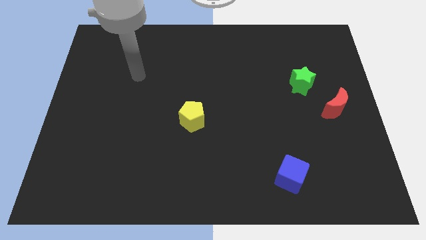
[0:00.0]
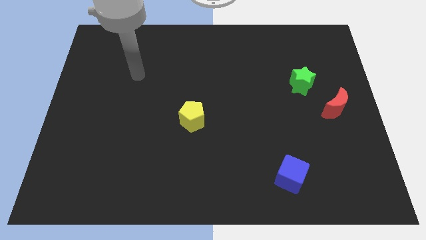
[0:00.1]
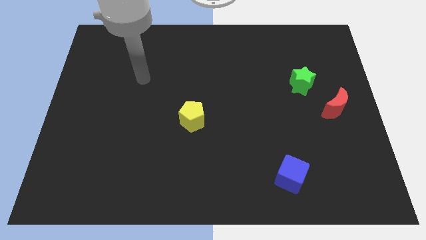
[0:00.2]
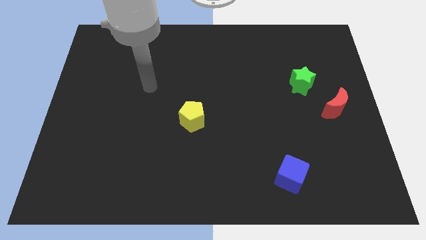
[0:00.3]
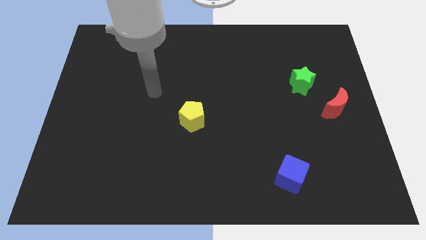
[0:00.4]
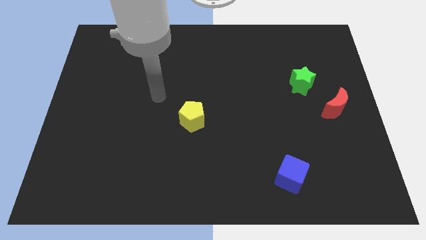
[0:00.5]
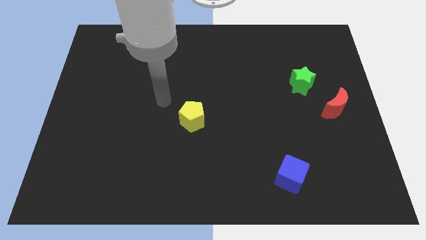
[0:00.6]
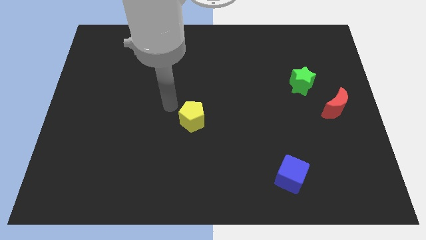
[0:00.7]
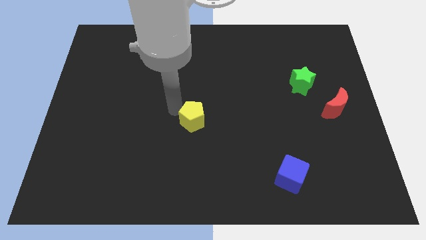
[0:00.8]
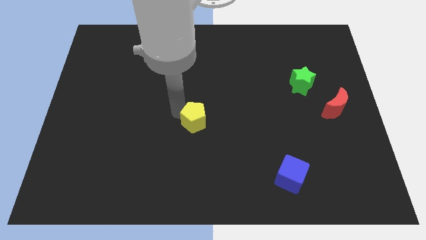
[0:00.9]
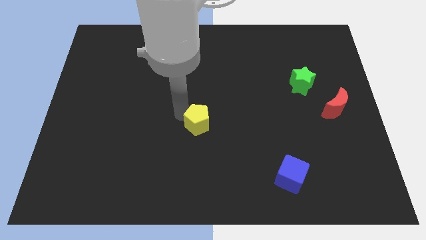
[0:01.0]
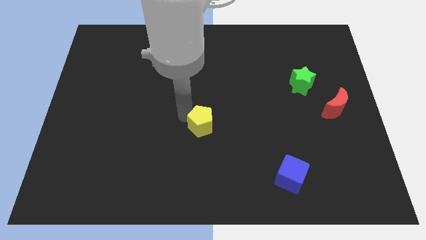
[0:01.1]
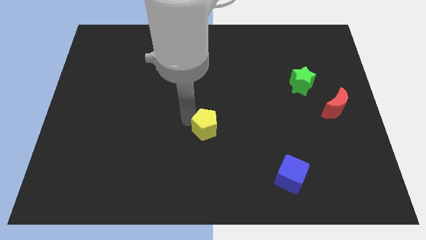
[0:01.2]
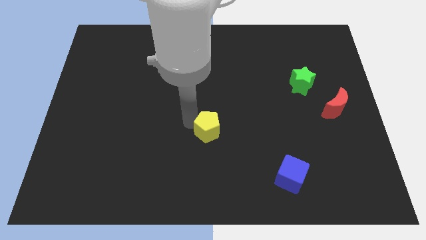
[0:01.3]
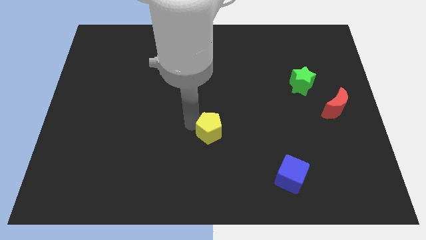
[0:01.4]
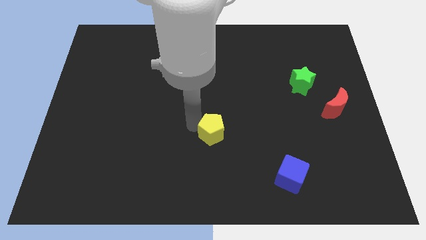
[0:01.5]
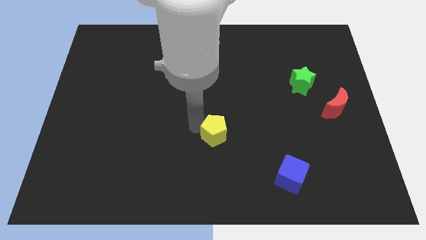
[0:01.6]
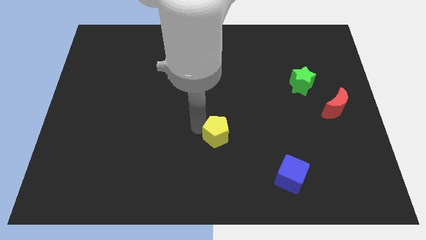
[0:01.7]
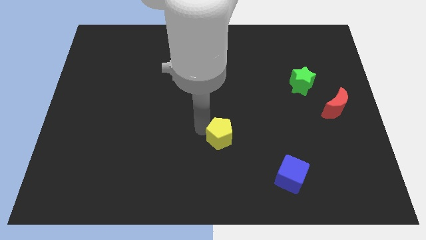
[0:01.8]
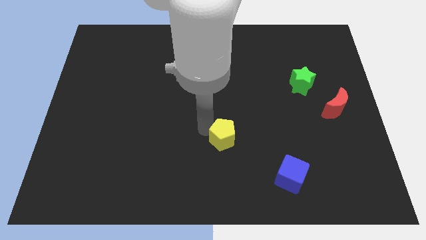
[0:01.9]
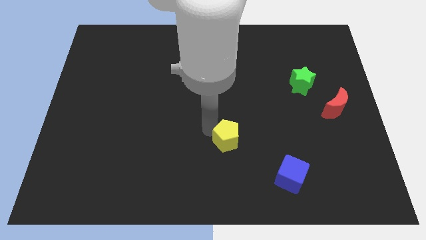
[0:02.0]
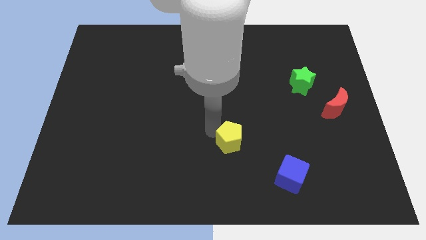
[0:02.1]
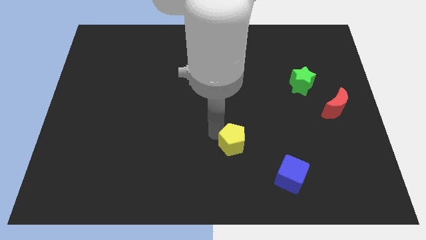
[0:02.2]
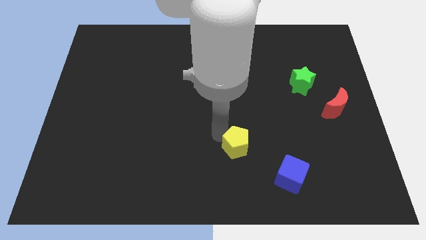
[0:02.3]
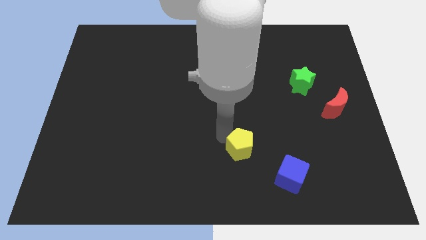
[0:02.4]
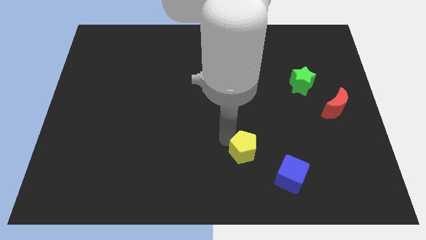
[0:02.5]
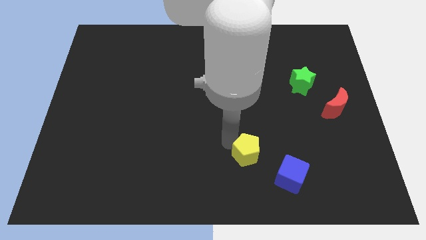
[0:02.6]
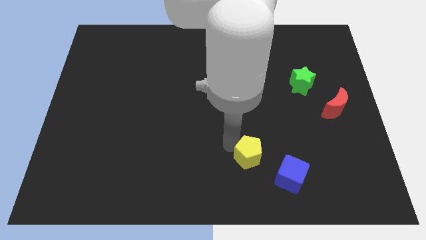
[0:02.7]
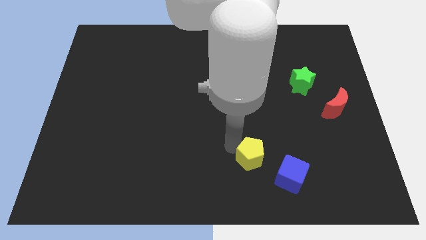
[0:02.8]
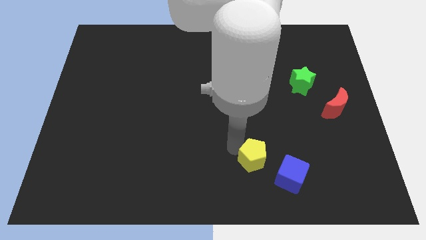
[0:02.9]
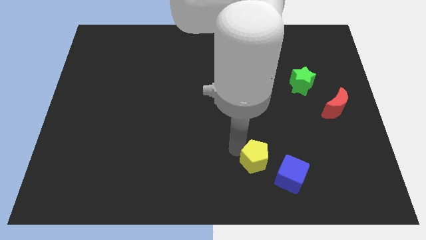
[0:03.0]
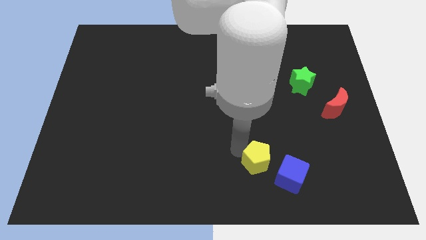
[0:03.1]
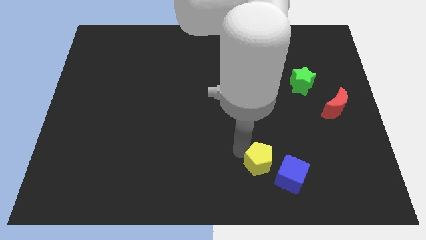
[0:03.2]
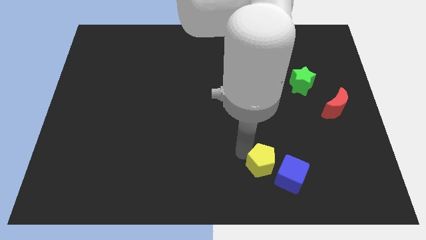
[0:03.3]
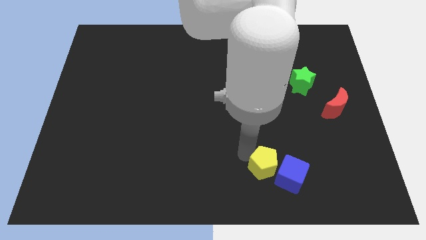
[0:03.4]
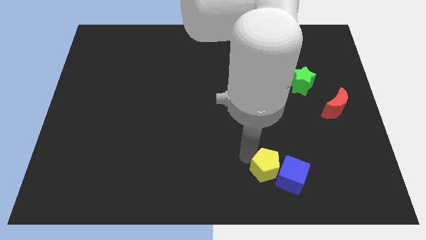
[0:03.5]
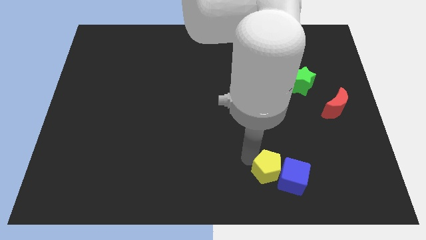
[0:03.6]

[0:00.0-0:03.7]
move the yellow pentagon close to the cube

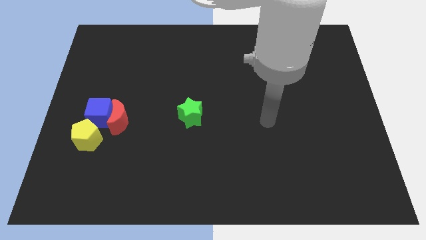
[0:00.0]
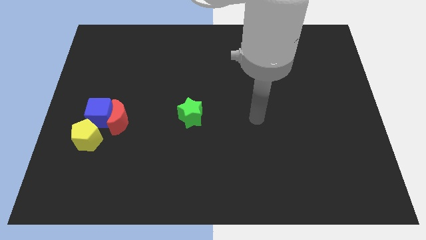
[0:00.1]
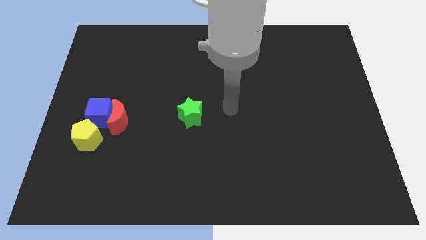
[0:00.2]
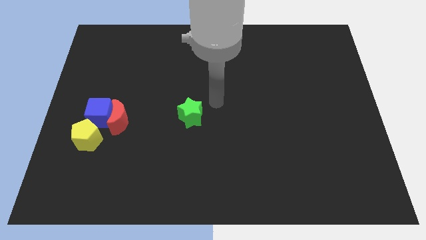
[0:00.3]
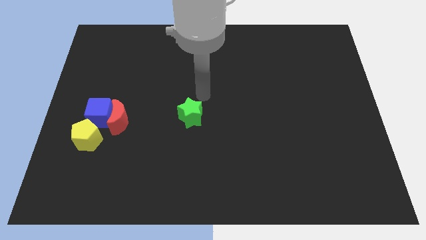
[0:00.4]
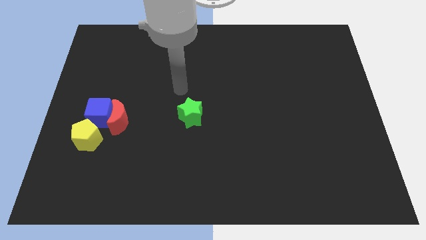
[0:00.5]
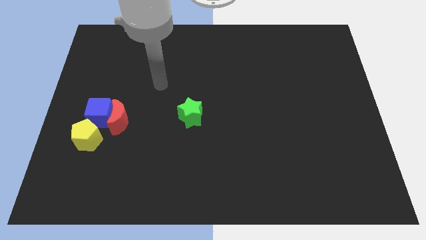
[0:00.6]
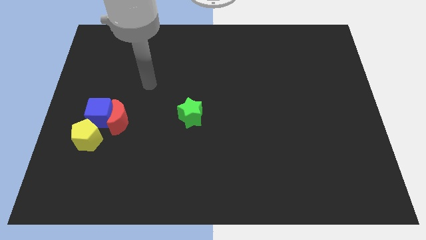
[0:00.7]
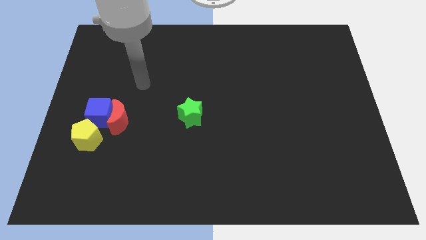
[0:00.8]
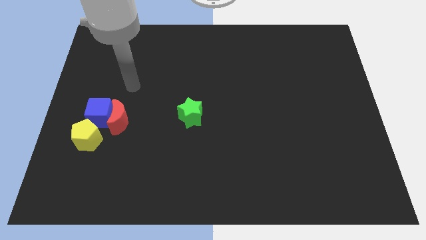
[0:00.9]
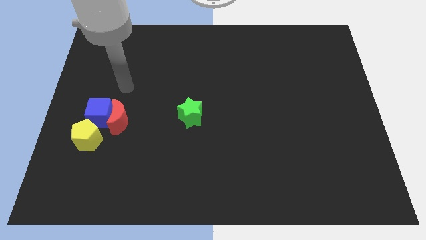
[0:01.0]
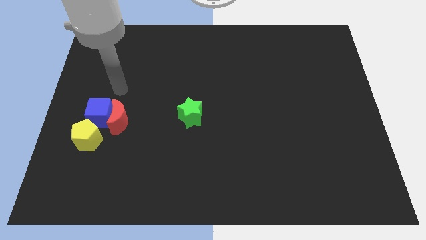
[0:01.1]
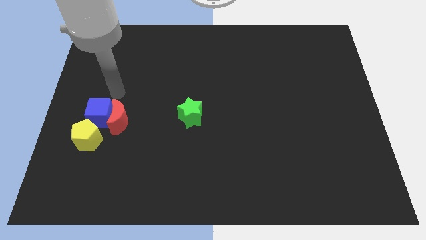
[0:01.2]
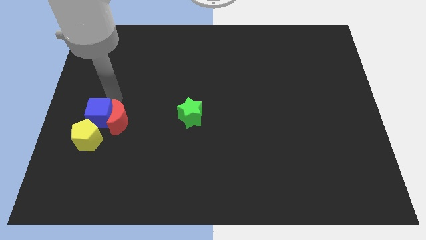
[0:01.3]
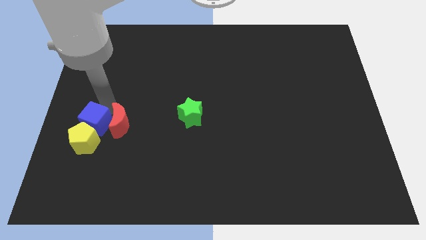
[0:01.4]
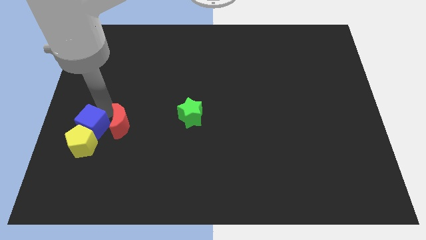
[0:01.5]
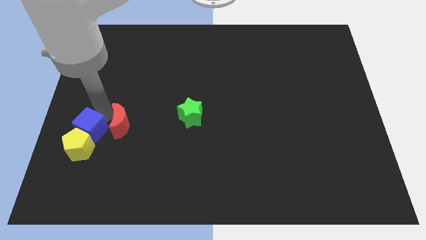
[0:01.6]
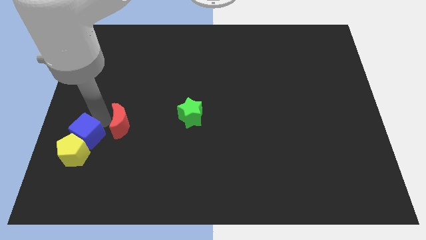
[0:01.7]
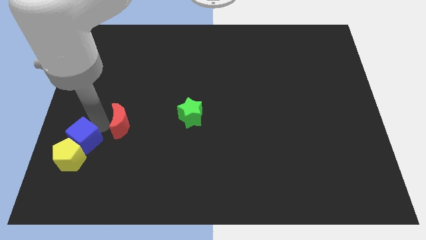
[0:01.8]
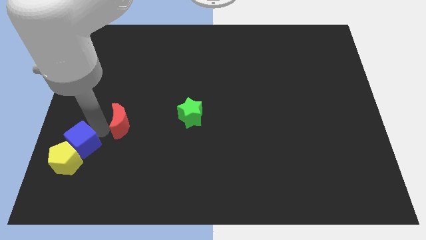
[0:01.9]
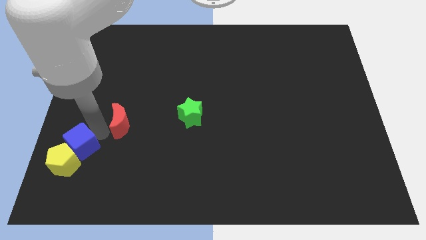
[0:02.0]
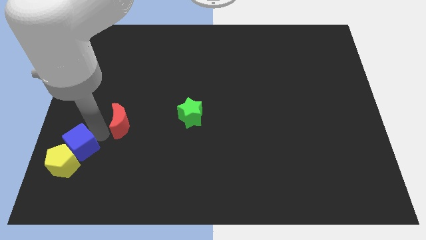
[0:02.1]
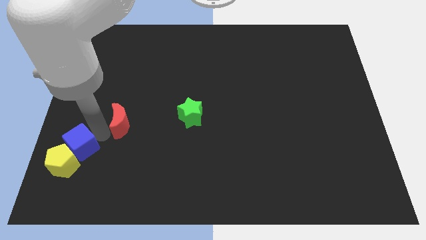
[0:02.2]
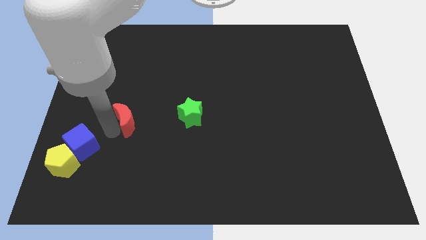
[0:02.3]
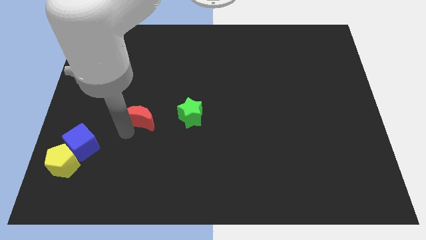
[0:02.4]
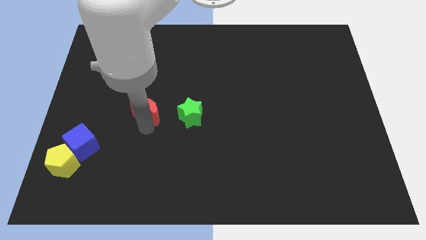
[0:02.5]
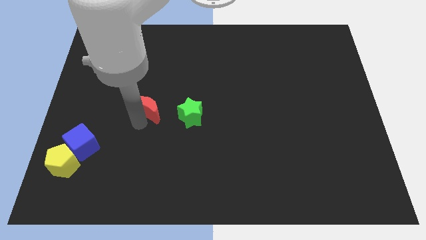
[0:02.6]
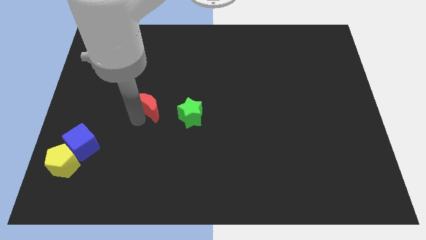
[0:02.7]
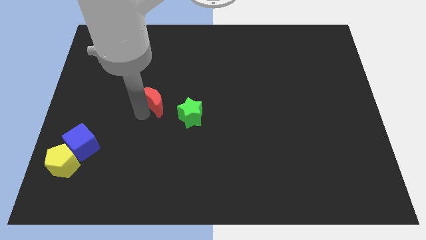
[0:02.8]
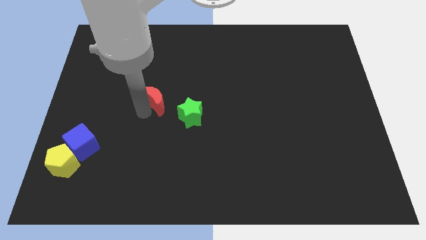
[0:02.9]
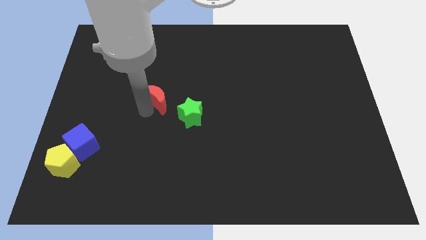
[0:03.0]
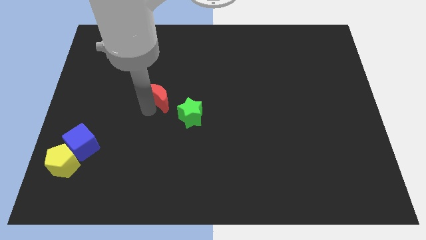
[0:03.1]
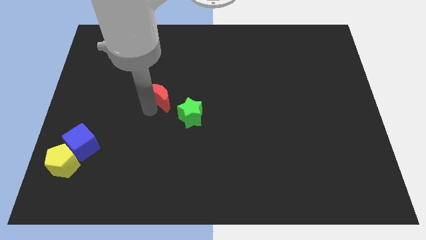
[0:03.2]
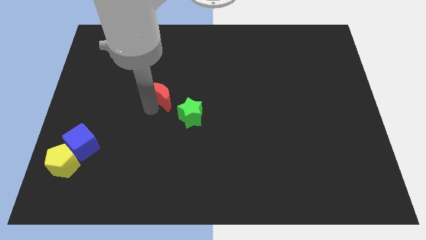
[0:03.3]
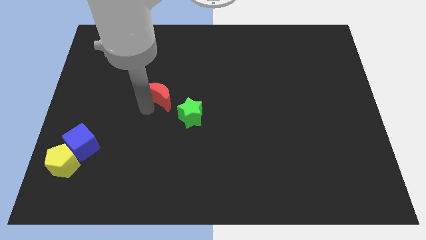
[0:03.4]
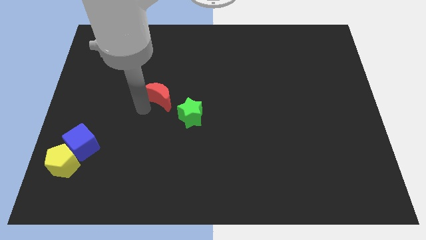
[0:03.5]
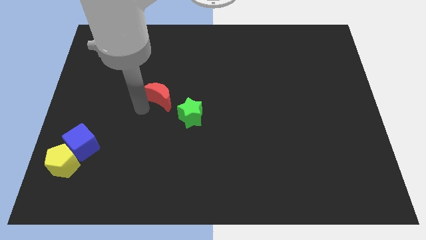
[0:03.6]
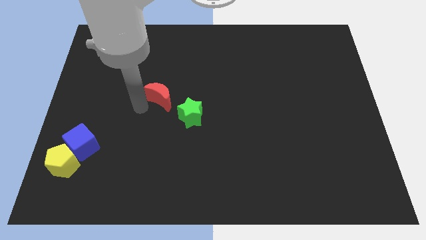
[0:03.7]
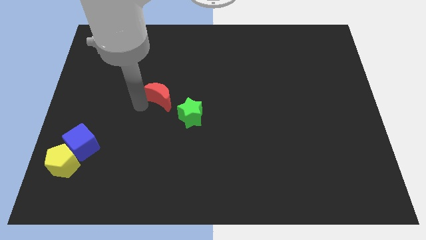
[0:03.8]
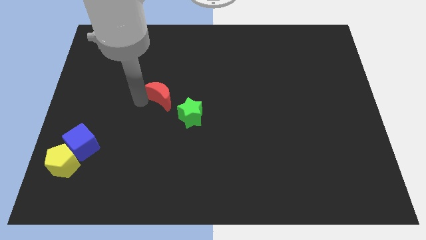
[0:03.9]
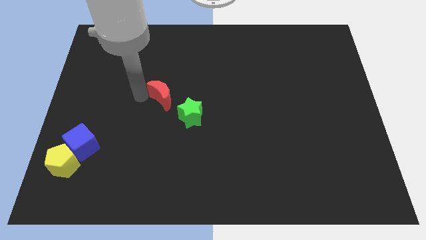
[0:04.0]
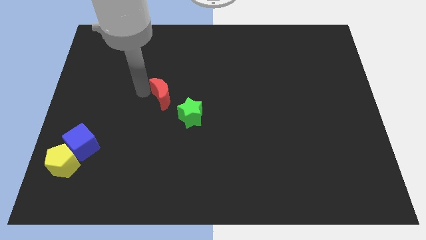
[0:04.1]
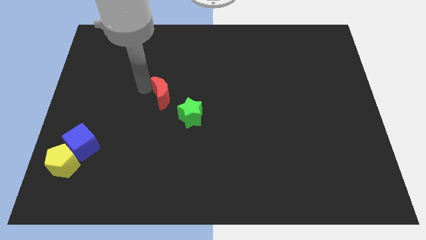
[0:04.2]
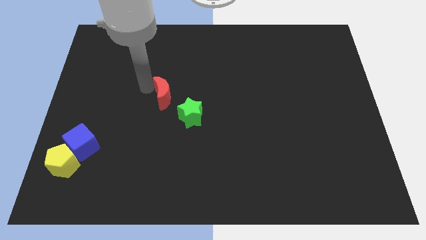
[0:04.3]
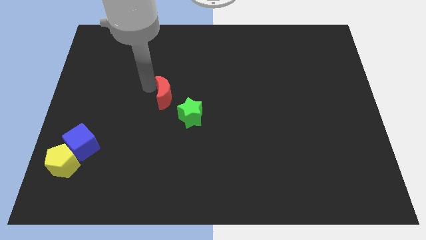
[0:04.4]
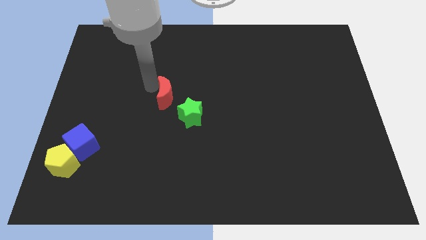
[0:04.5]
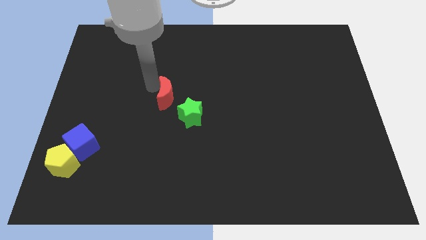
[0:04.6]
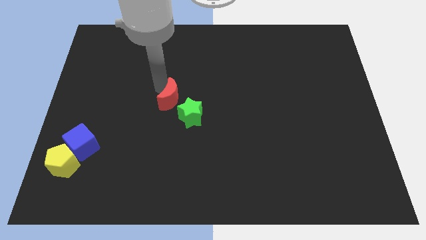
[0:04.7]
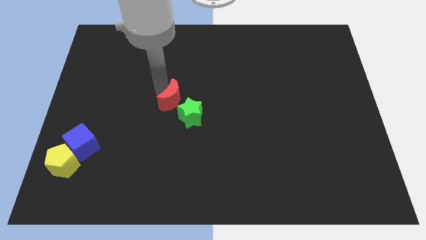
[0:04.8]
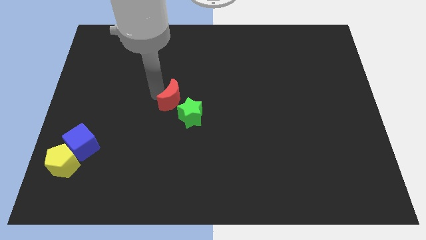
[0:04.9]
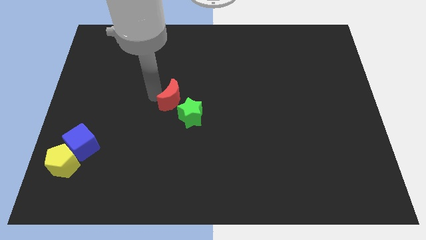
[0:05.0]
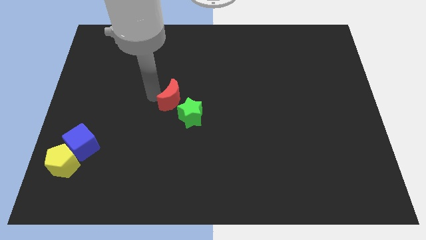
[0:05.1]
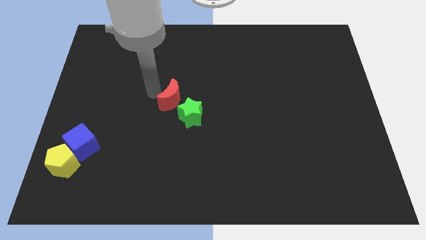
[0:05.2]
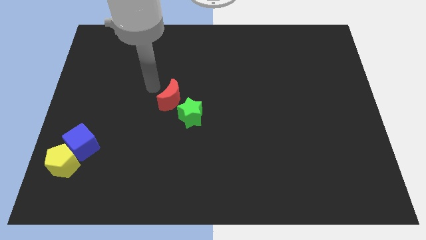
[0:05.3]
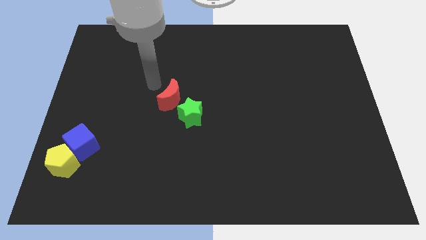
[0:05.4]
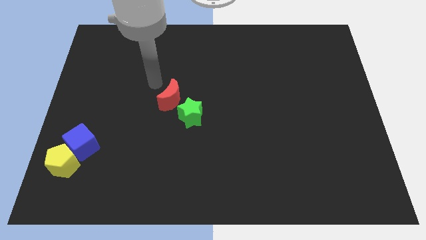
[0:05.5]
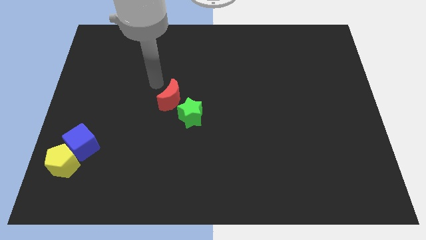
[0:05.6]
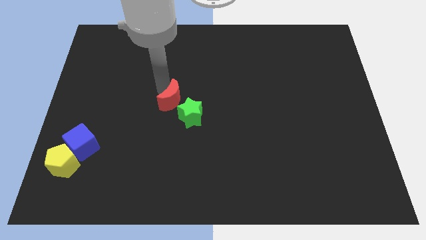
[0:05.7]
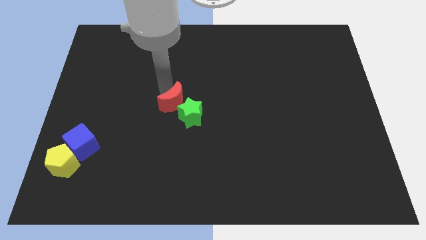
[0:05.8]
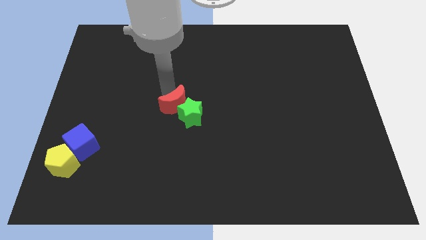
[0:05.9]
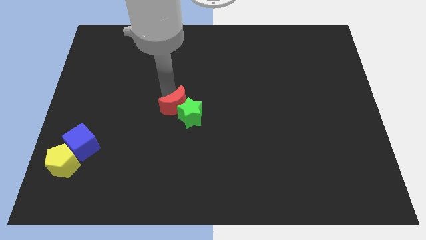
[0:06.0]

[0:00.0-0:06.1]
slide the red block next to the green block
